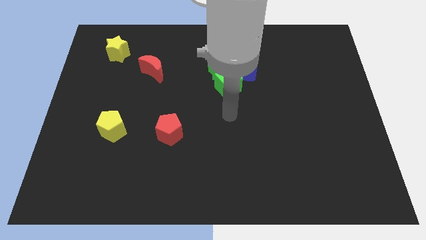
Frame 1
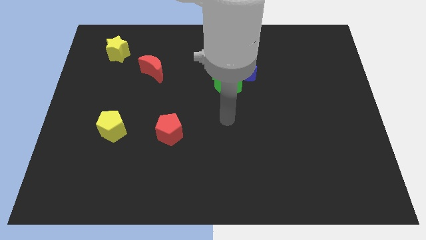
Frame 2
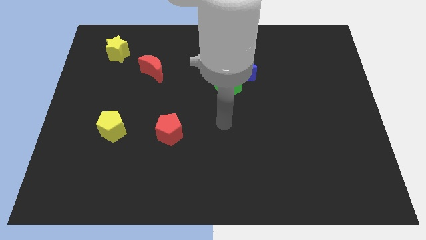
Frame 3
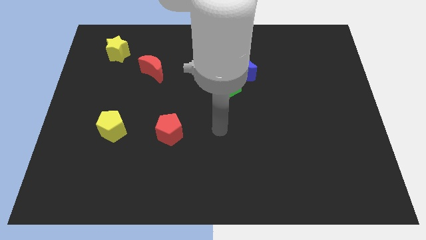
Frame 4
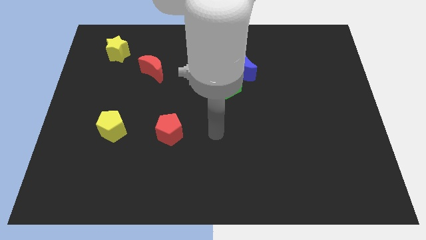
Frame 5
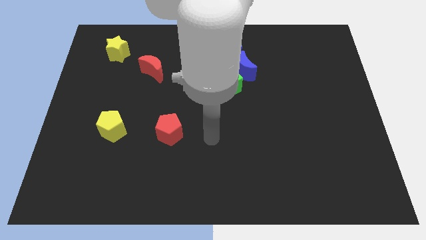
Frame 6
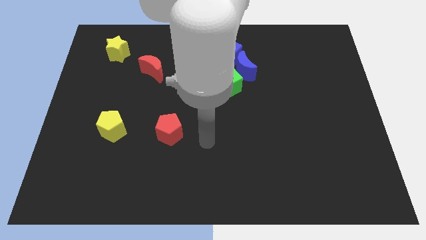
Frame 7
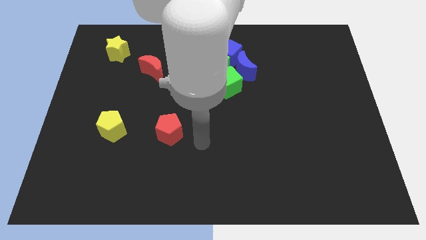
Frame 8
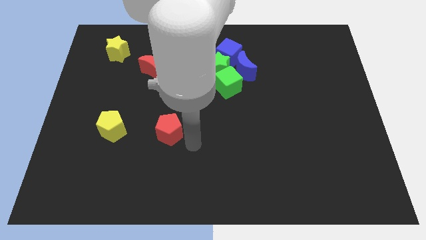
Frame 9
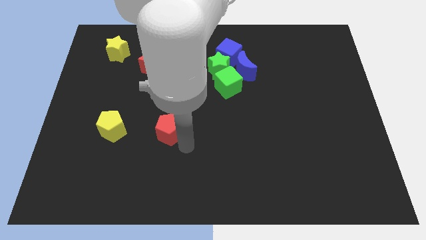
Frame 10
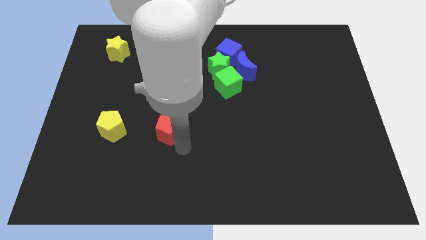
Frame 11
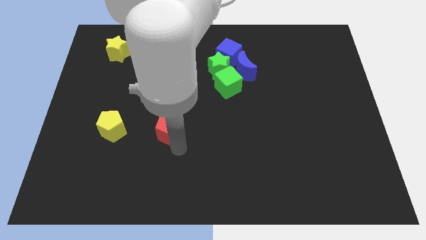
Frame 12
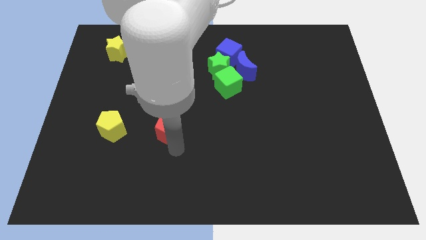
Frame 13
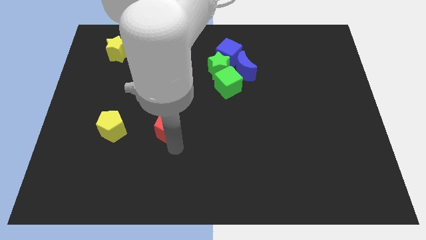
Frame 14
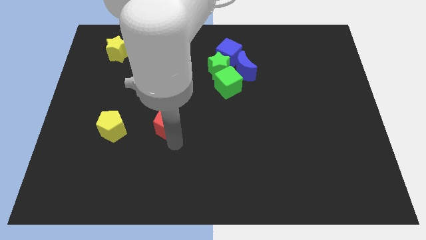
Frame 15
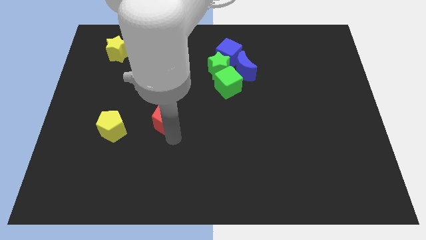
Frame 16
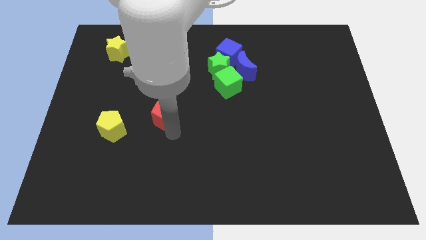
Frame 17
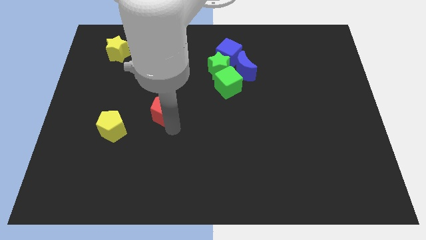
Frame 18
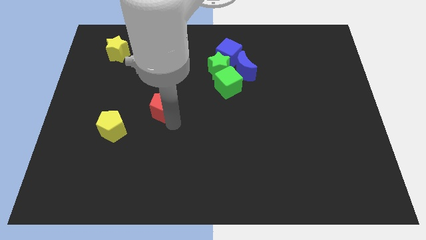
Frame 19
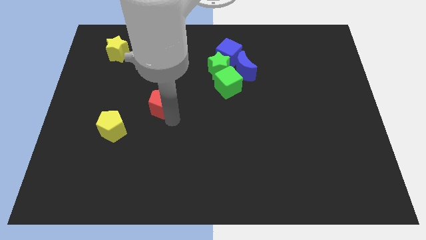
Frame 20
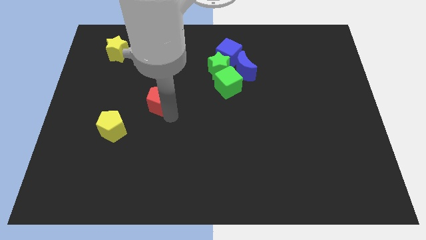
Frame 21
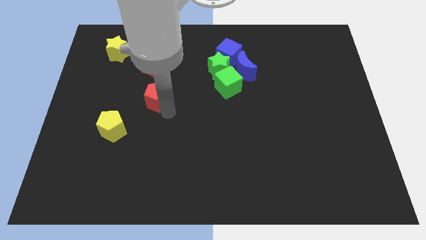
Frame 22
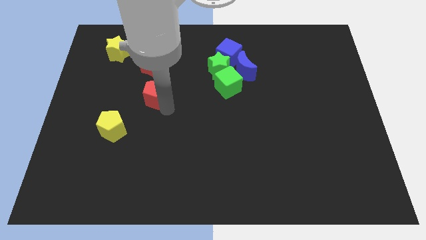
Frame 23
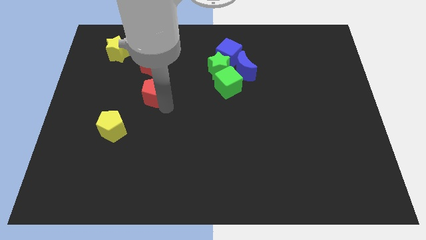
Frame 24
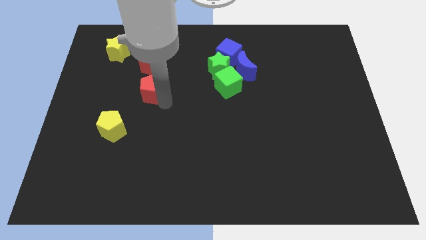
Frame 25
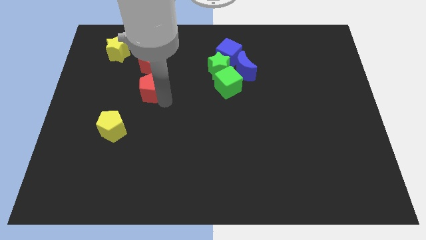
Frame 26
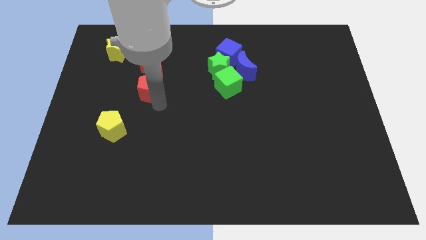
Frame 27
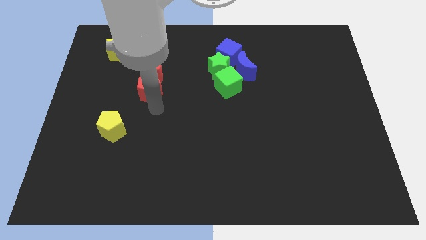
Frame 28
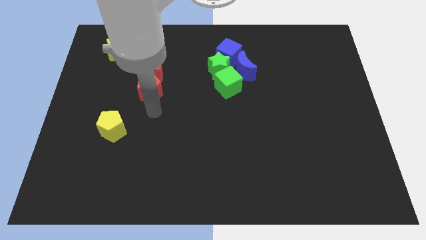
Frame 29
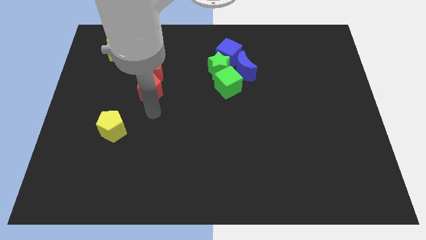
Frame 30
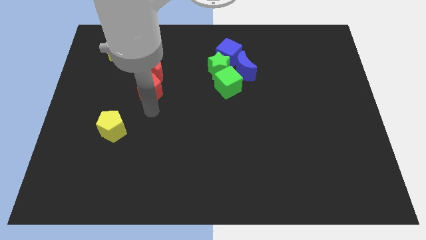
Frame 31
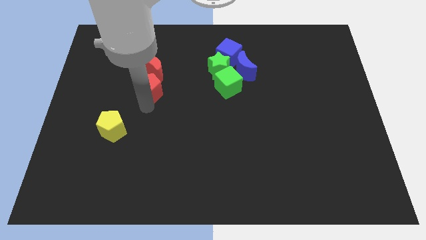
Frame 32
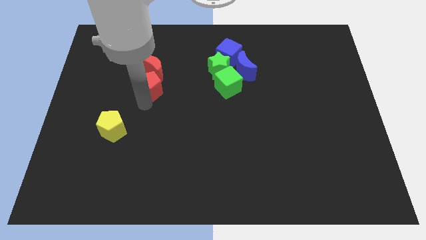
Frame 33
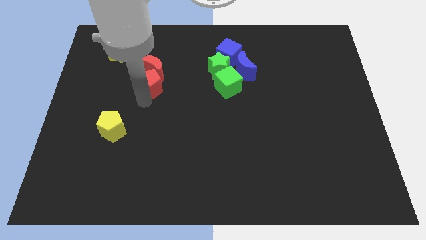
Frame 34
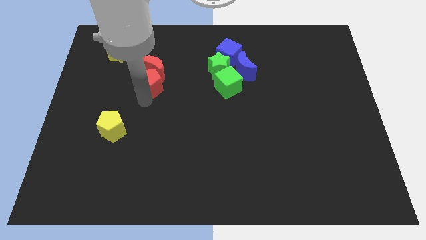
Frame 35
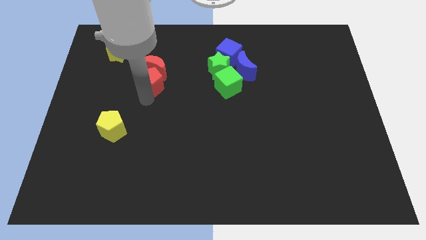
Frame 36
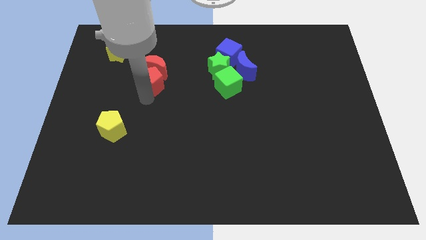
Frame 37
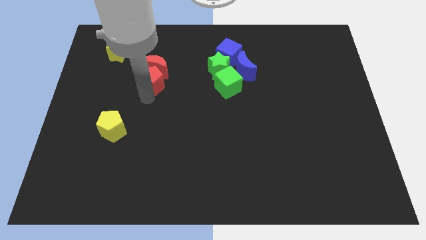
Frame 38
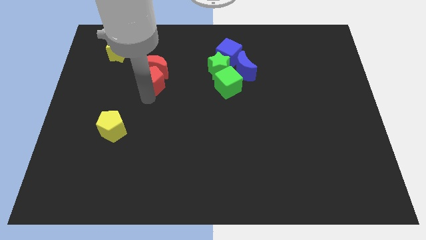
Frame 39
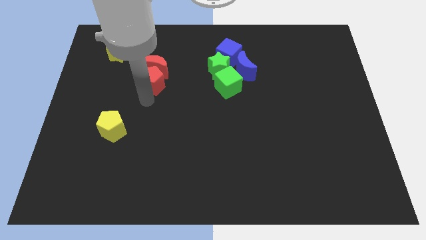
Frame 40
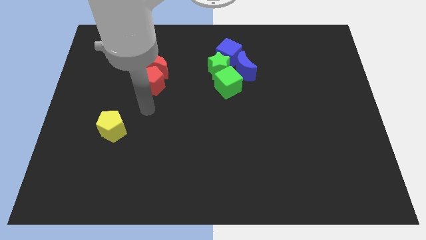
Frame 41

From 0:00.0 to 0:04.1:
move red pentagon into red crescent

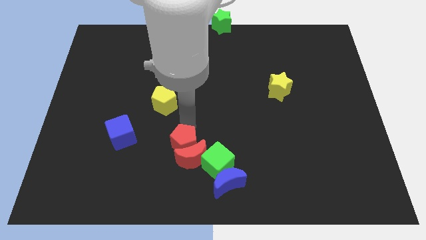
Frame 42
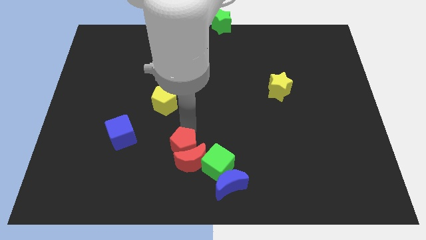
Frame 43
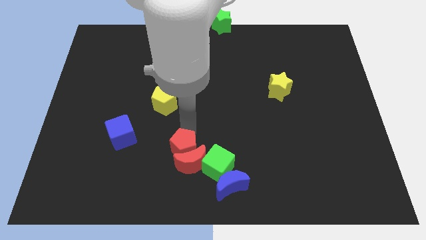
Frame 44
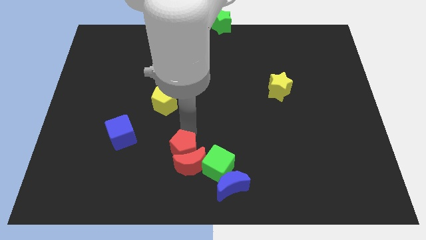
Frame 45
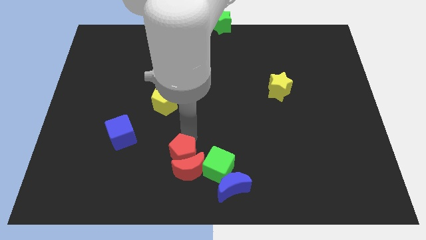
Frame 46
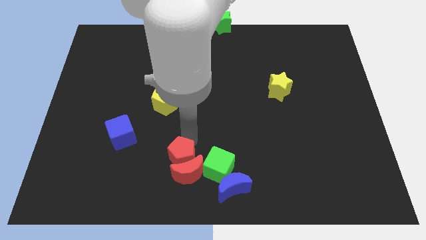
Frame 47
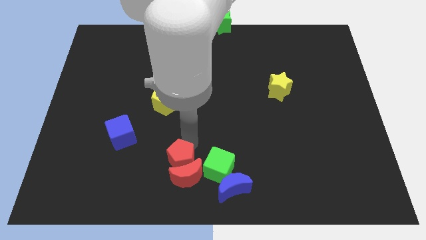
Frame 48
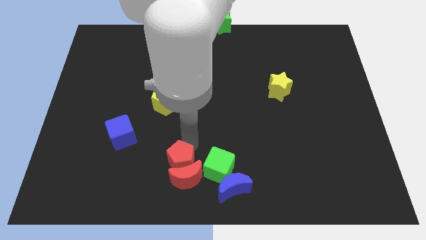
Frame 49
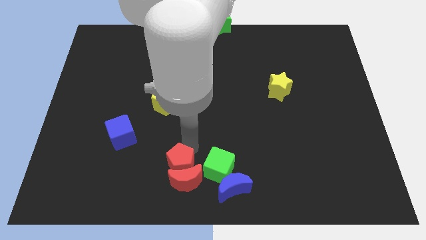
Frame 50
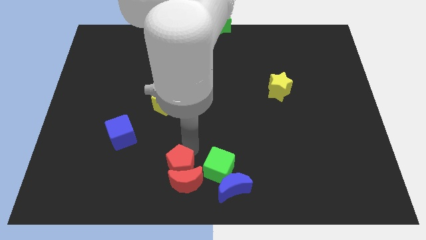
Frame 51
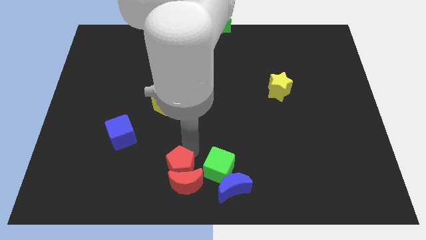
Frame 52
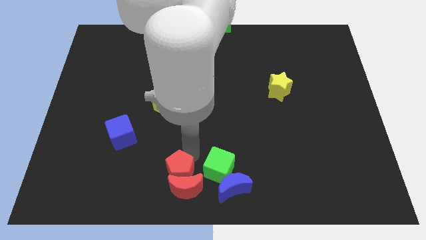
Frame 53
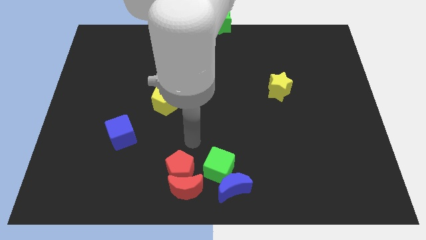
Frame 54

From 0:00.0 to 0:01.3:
push the group of red blocks towards the bottom of the board

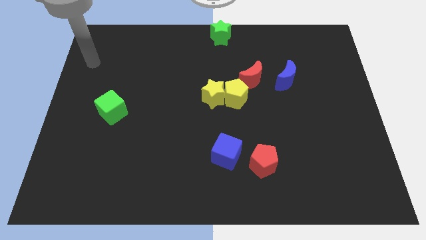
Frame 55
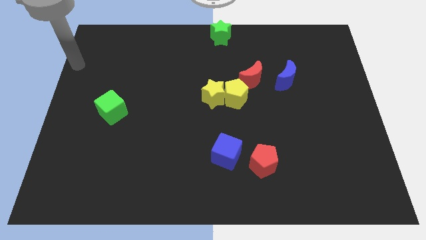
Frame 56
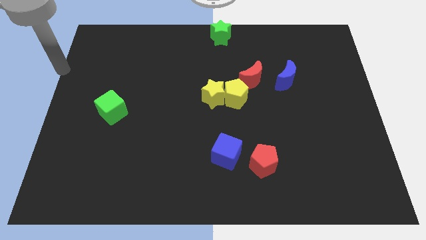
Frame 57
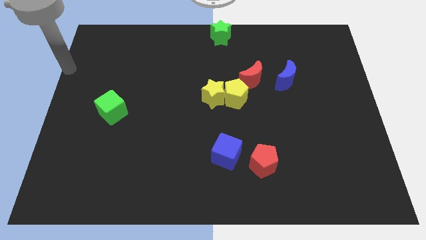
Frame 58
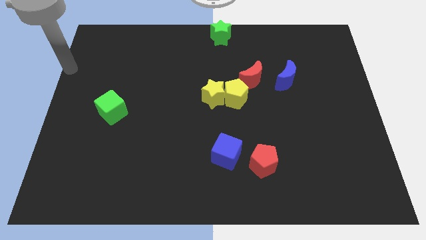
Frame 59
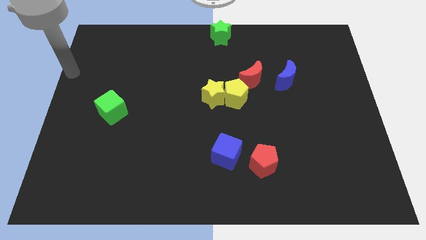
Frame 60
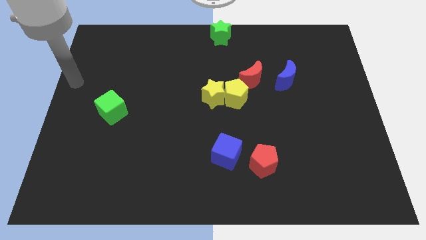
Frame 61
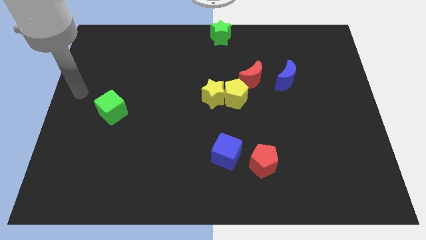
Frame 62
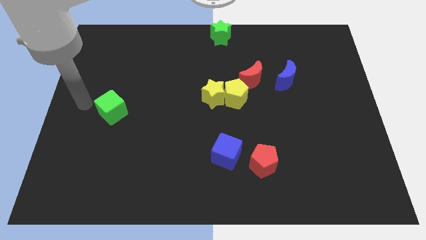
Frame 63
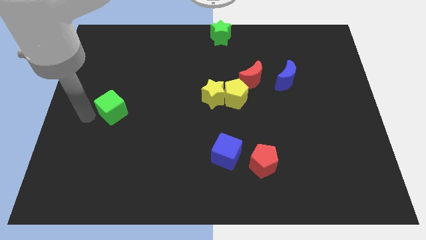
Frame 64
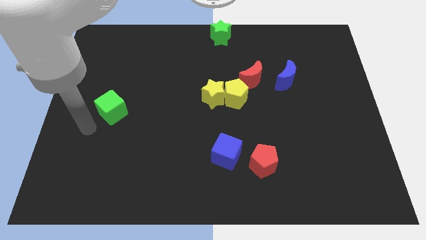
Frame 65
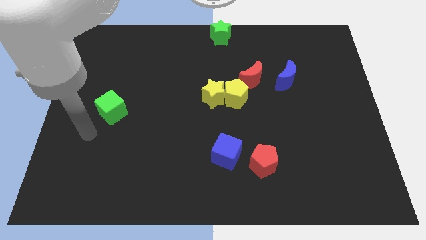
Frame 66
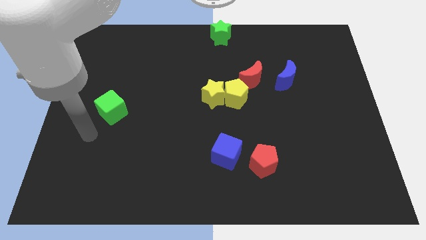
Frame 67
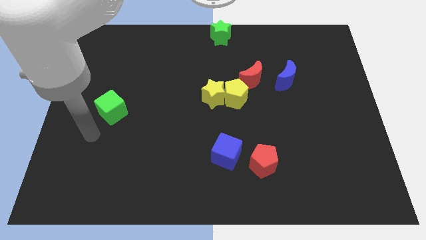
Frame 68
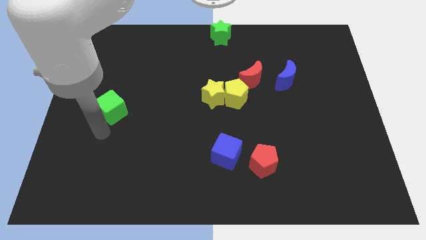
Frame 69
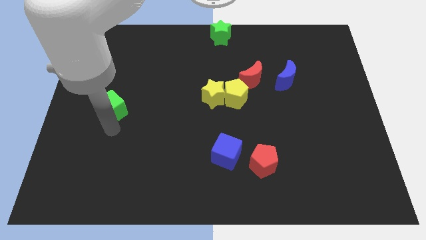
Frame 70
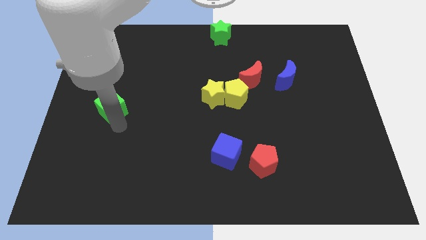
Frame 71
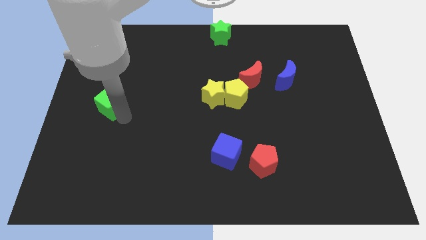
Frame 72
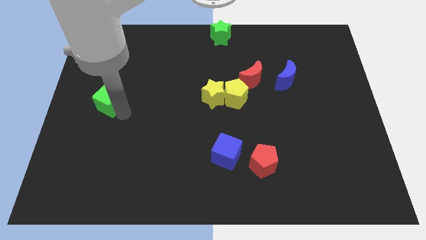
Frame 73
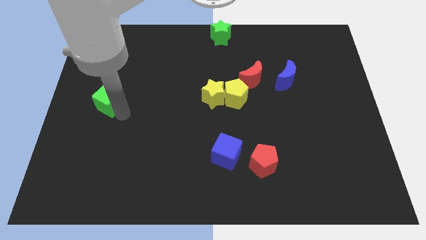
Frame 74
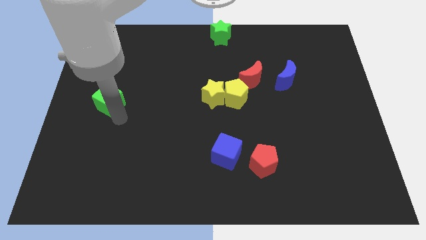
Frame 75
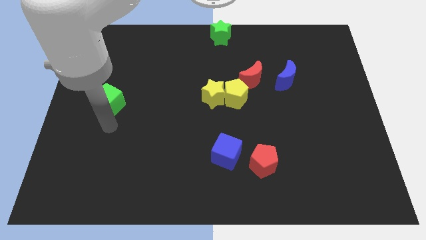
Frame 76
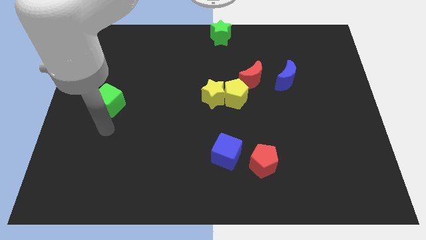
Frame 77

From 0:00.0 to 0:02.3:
move your arm to the bottom of the green block

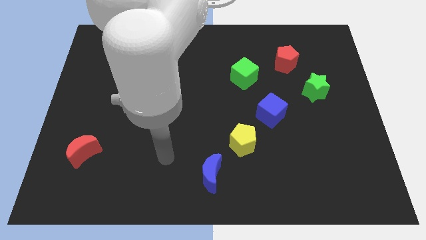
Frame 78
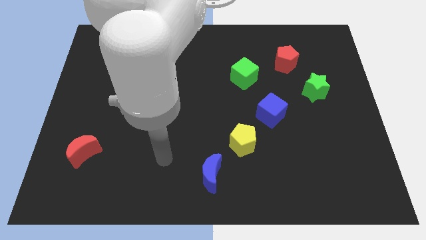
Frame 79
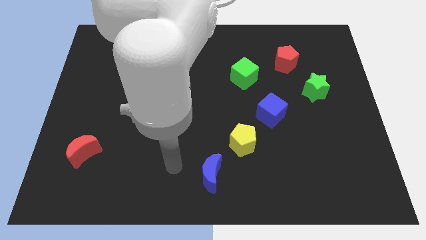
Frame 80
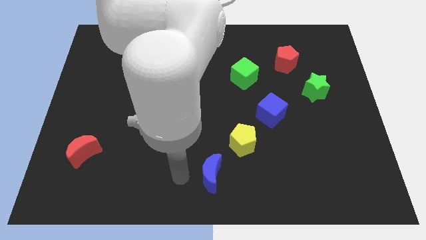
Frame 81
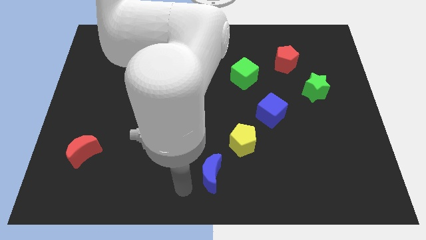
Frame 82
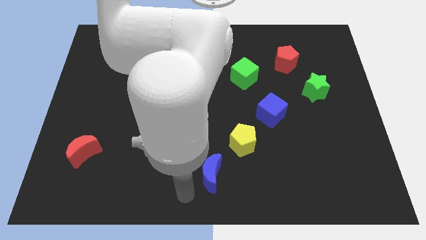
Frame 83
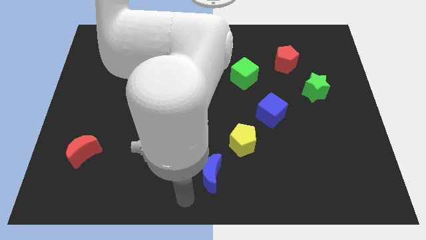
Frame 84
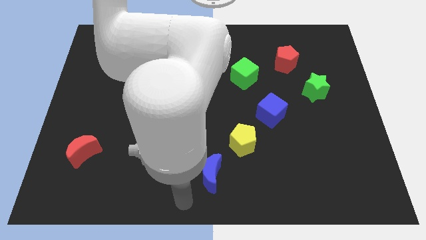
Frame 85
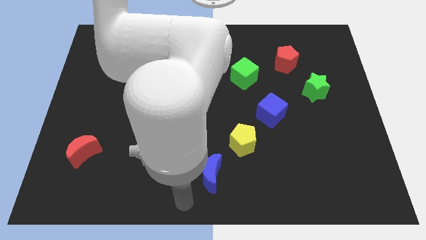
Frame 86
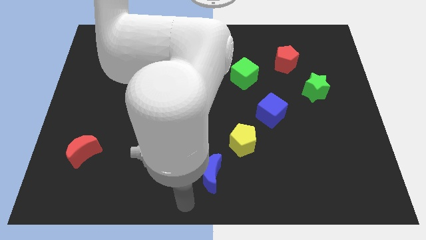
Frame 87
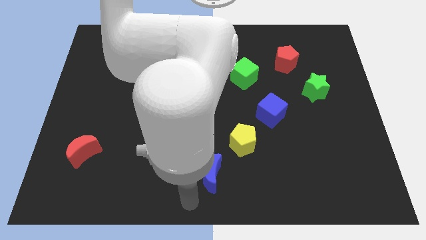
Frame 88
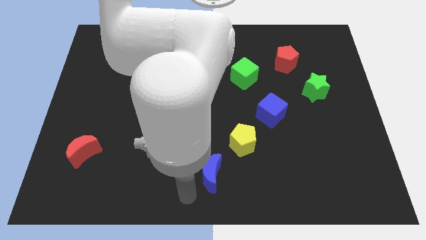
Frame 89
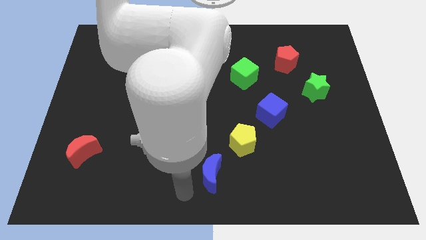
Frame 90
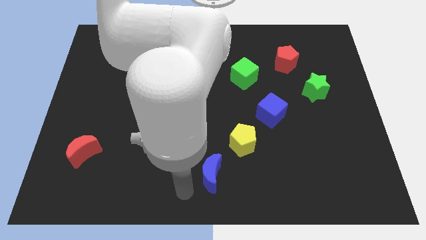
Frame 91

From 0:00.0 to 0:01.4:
point your arm at the bottom left side of blue moon
